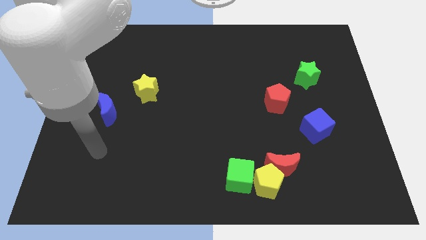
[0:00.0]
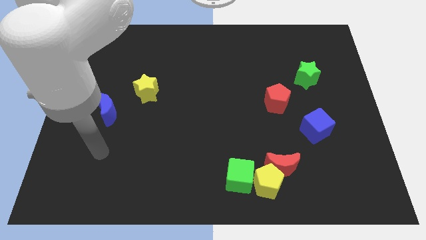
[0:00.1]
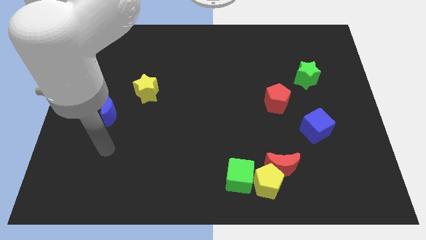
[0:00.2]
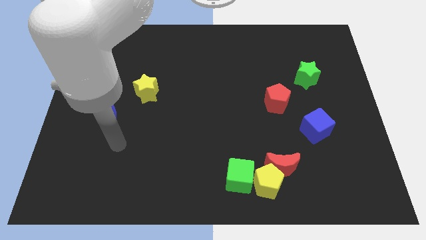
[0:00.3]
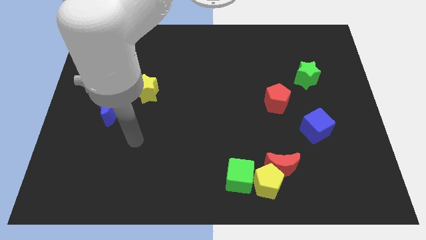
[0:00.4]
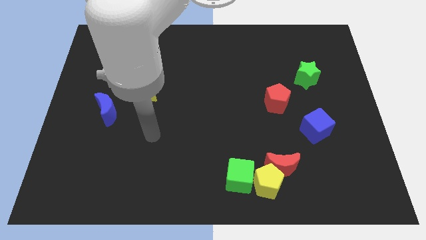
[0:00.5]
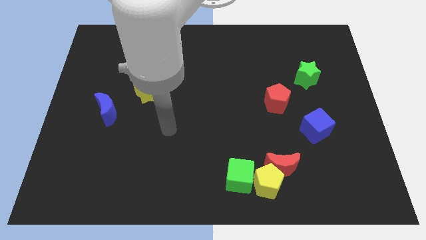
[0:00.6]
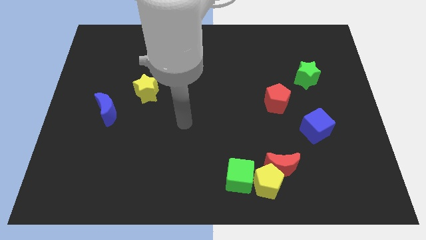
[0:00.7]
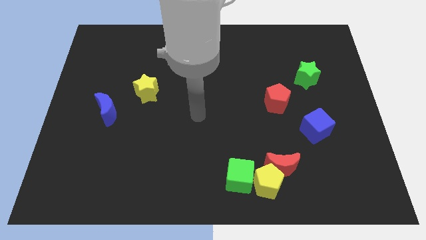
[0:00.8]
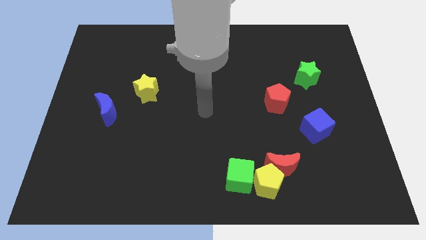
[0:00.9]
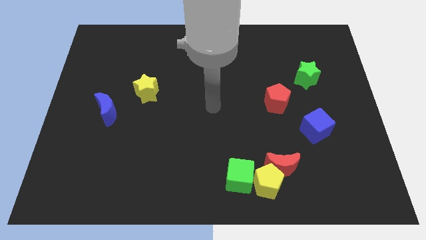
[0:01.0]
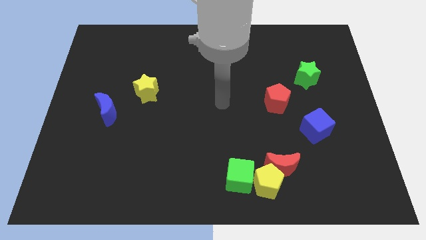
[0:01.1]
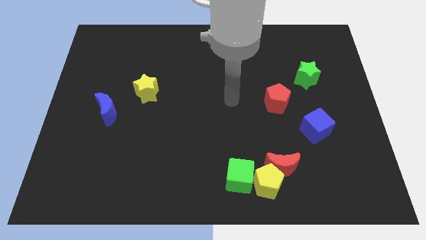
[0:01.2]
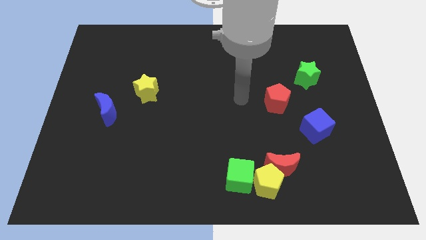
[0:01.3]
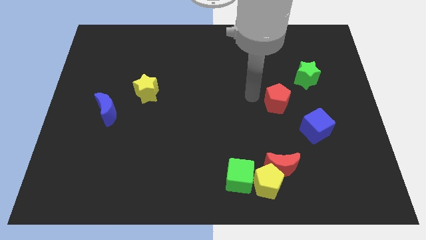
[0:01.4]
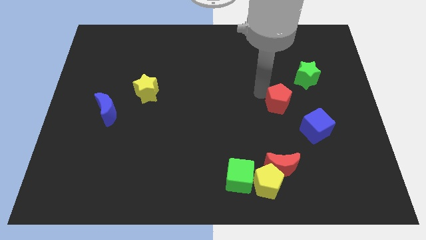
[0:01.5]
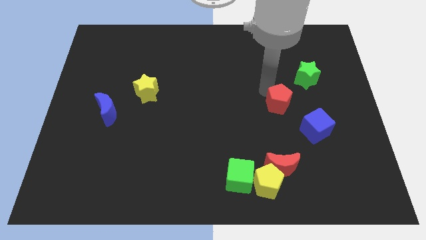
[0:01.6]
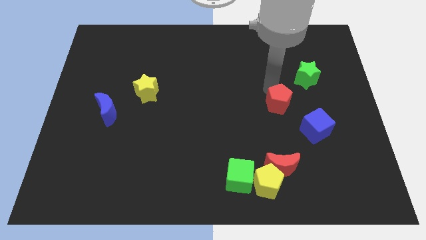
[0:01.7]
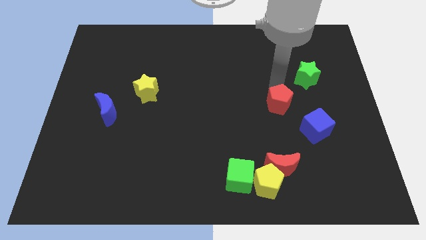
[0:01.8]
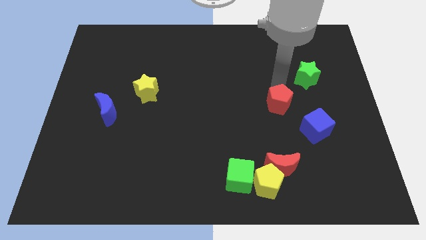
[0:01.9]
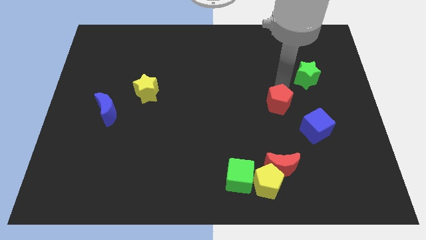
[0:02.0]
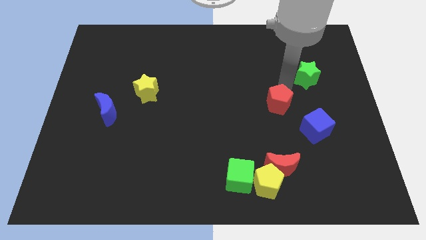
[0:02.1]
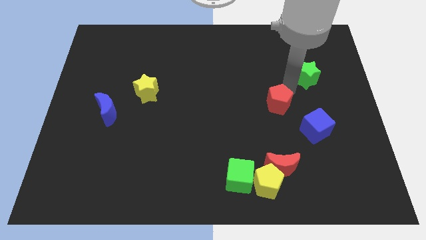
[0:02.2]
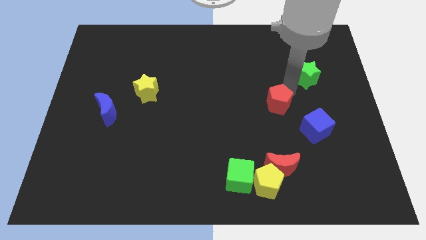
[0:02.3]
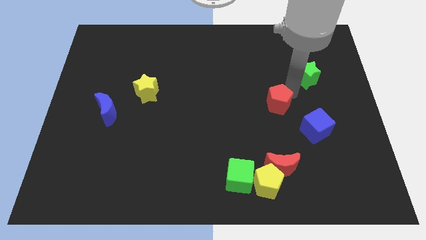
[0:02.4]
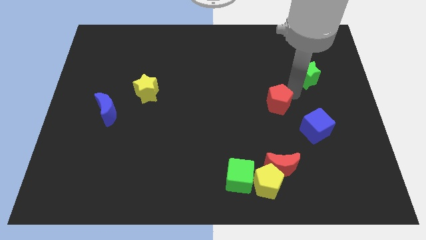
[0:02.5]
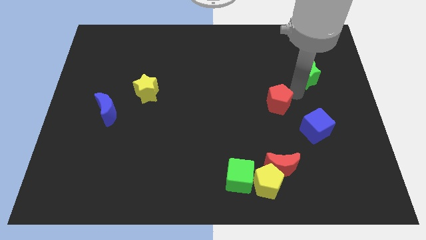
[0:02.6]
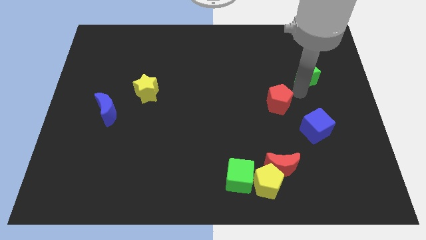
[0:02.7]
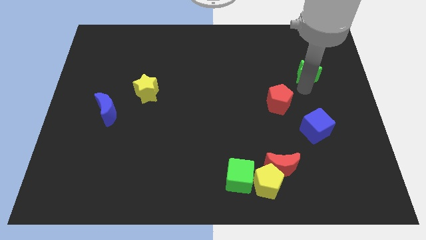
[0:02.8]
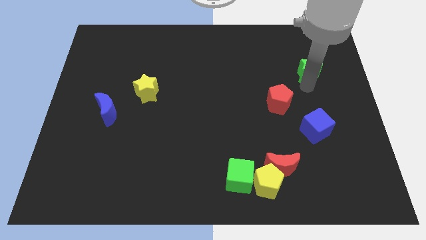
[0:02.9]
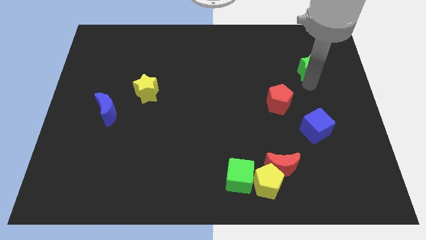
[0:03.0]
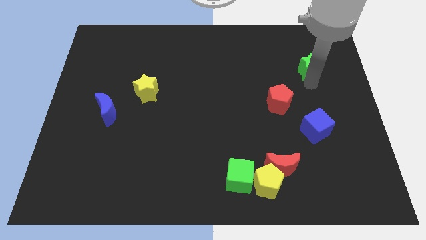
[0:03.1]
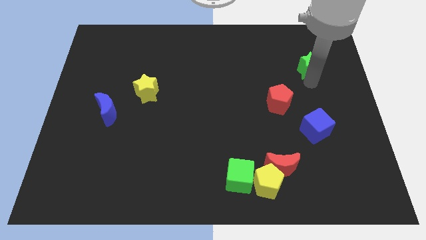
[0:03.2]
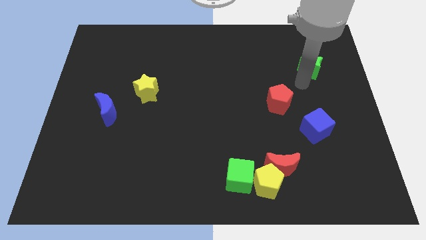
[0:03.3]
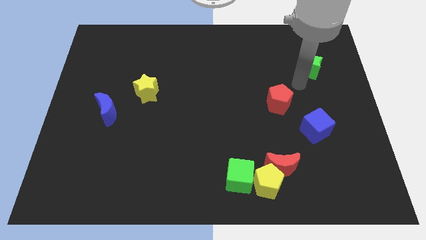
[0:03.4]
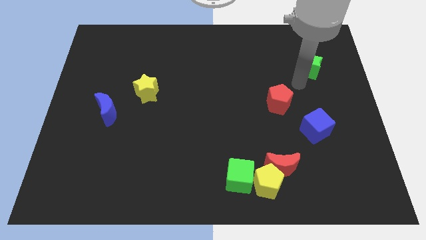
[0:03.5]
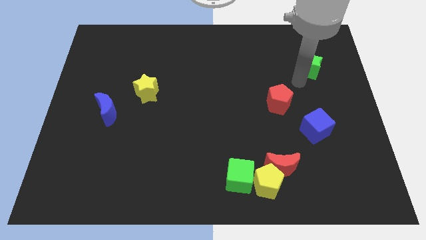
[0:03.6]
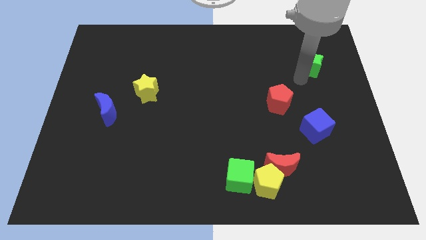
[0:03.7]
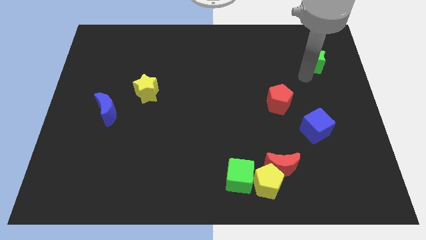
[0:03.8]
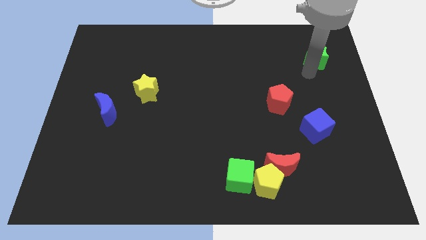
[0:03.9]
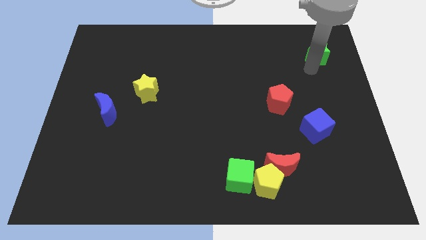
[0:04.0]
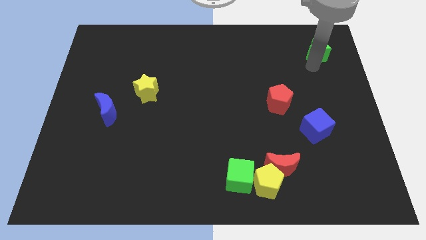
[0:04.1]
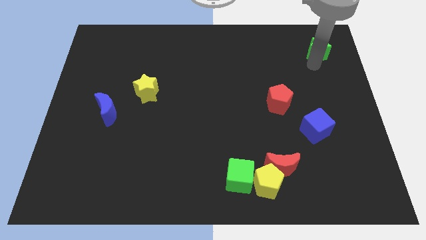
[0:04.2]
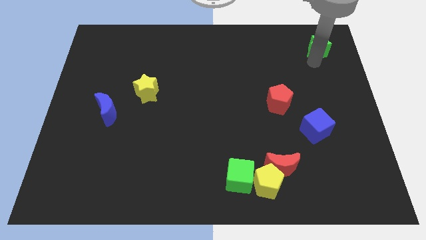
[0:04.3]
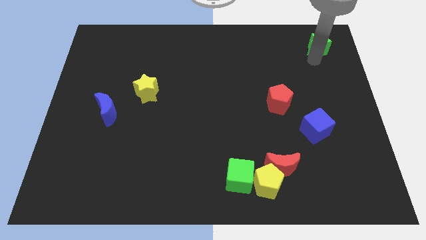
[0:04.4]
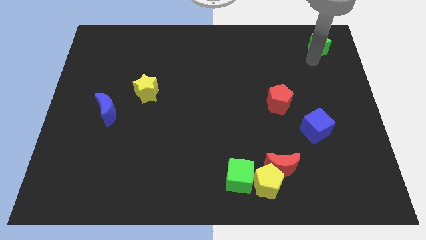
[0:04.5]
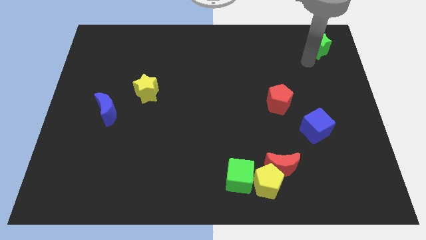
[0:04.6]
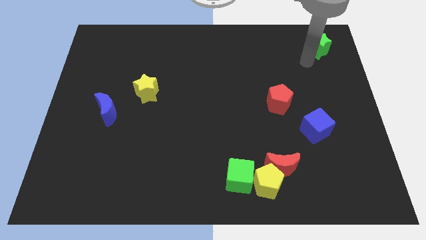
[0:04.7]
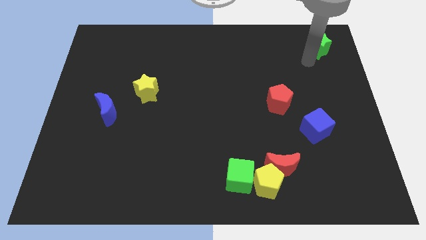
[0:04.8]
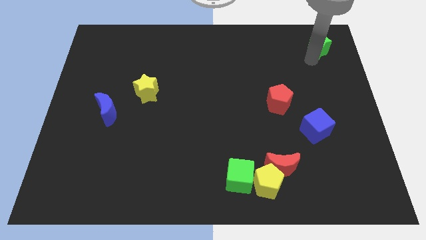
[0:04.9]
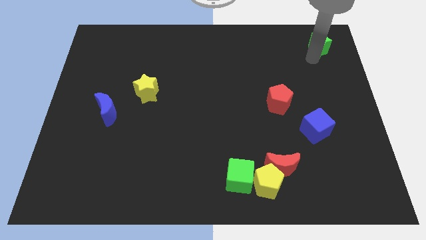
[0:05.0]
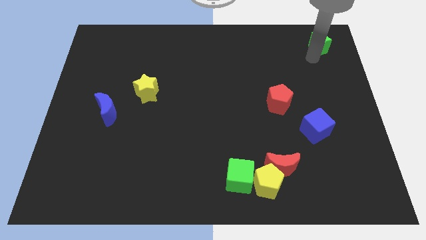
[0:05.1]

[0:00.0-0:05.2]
push the green star towards the top right corner of the board

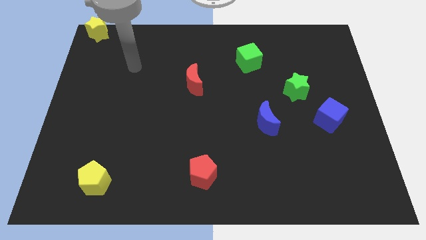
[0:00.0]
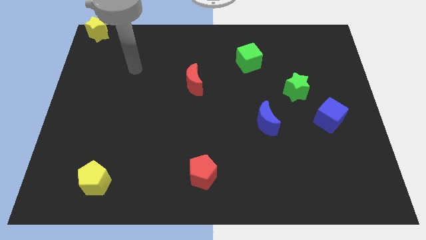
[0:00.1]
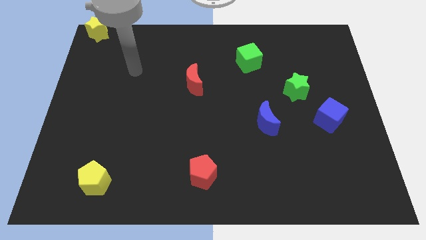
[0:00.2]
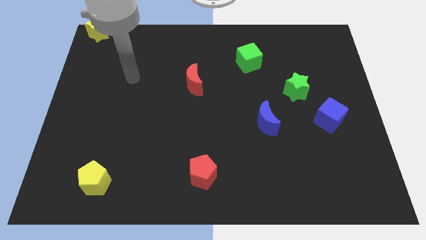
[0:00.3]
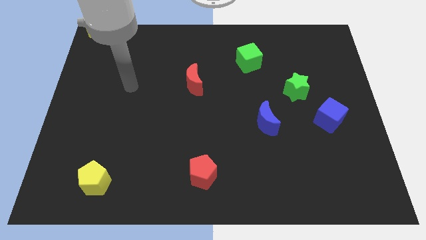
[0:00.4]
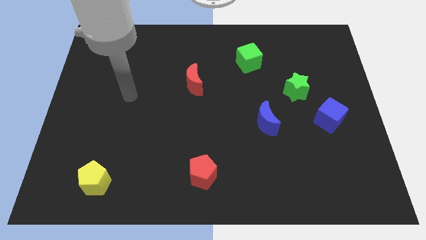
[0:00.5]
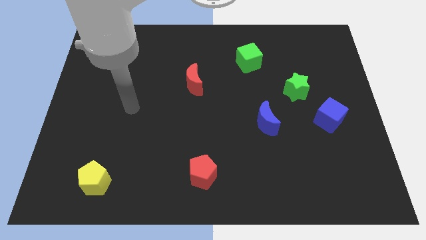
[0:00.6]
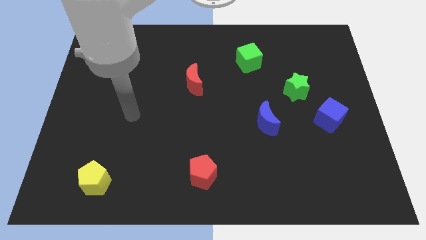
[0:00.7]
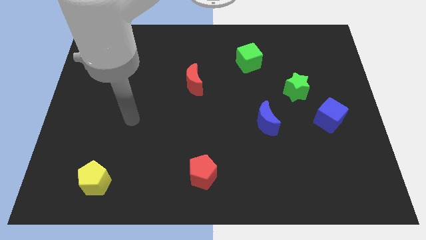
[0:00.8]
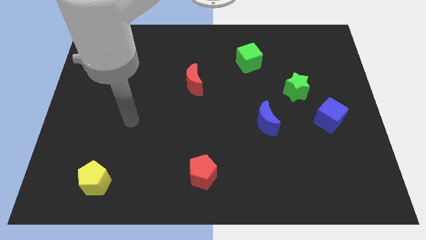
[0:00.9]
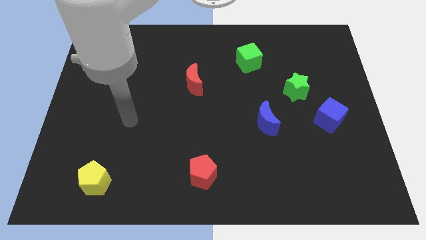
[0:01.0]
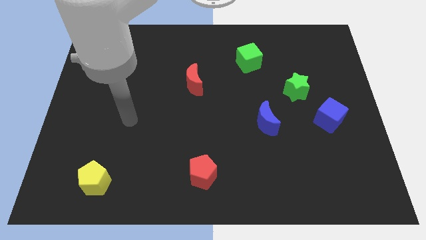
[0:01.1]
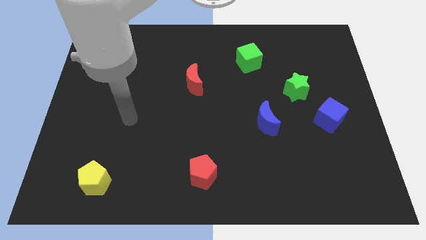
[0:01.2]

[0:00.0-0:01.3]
move the arm towards the bottom of the board

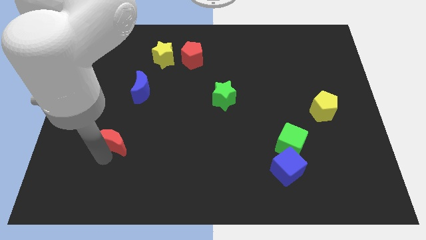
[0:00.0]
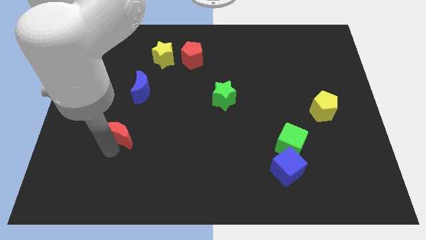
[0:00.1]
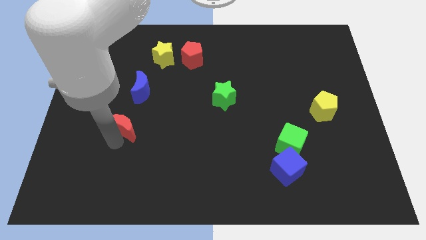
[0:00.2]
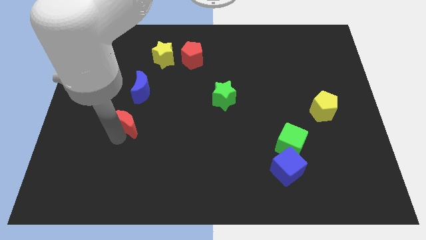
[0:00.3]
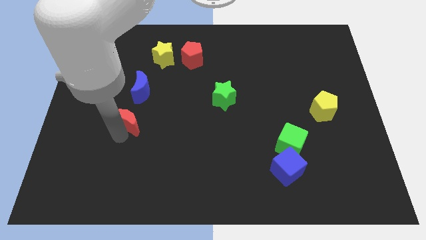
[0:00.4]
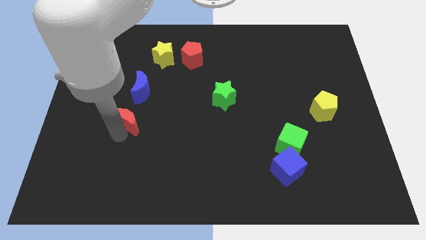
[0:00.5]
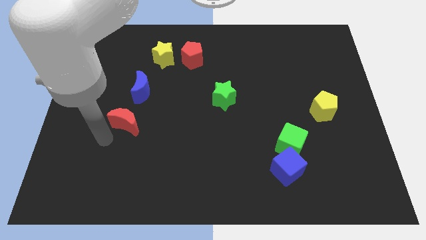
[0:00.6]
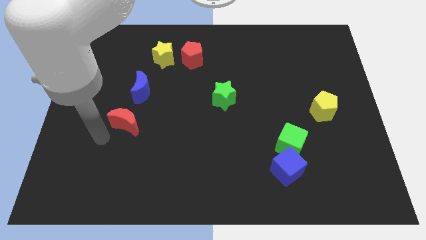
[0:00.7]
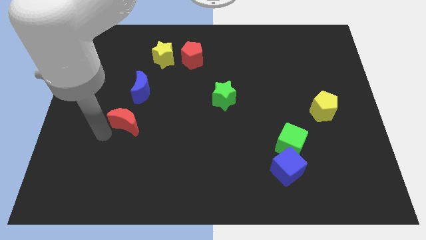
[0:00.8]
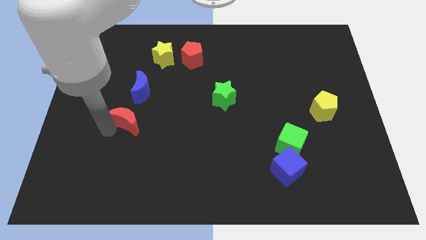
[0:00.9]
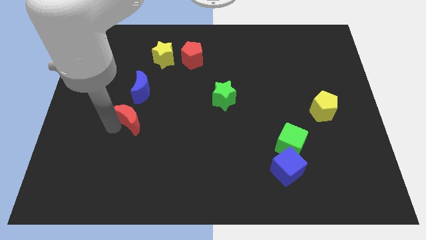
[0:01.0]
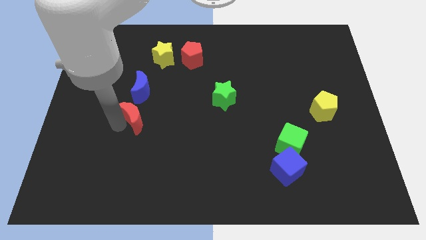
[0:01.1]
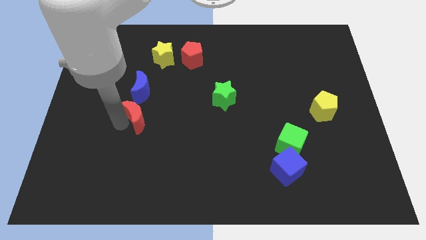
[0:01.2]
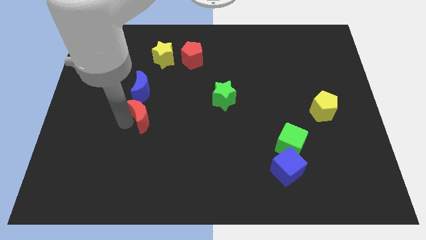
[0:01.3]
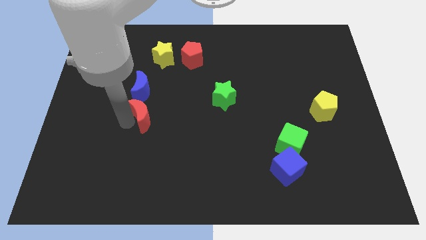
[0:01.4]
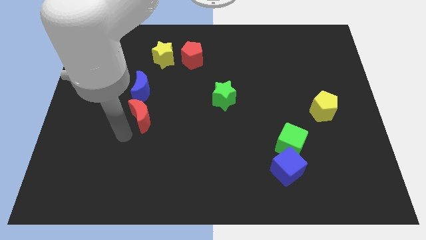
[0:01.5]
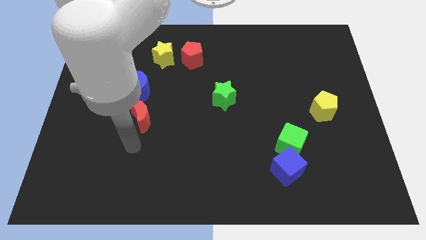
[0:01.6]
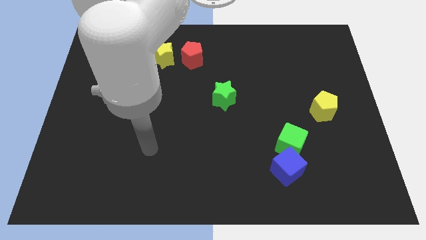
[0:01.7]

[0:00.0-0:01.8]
push red crescent towards the bottom of the blue crescent

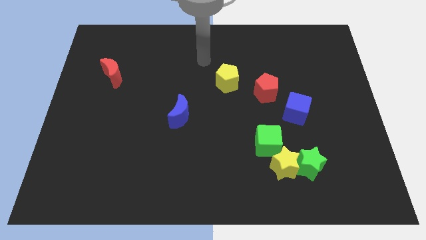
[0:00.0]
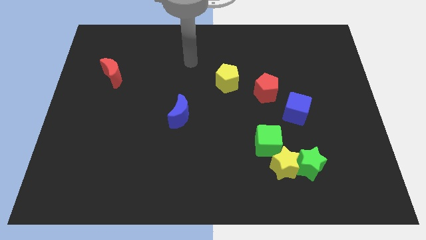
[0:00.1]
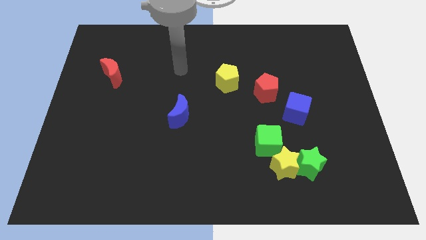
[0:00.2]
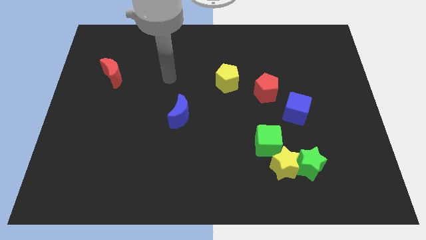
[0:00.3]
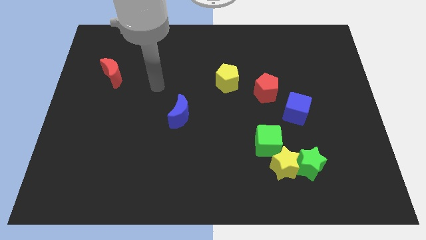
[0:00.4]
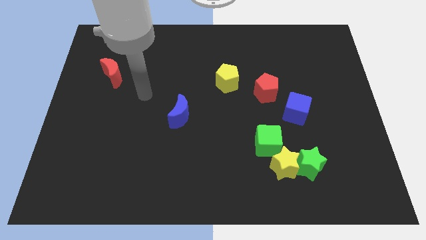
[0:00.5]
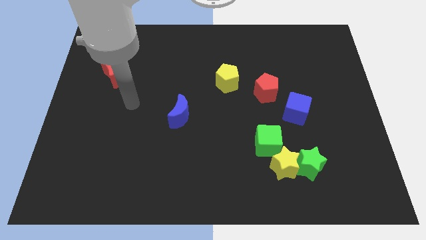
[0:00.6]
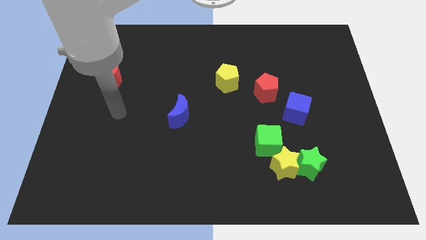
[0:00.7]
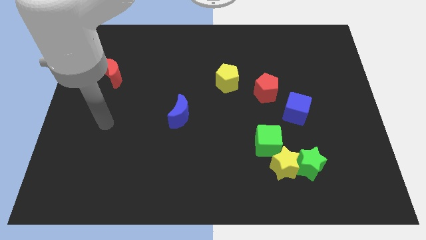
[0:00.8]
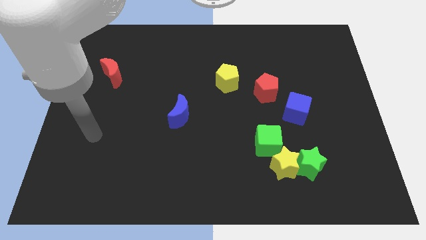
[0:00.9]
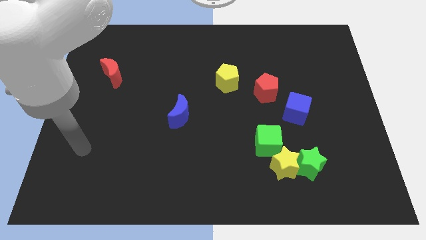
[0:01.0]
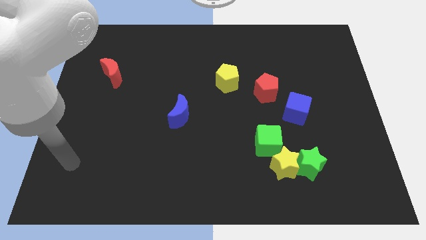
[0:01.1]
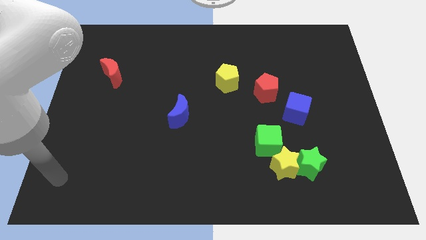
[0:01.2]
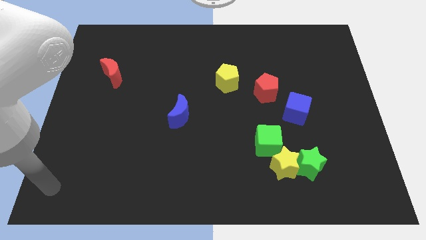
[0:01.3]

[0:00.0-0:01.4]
move arm to the left corner of the board
